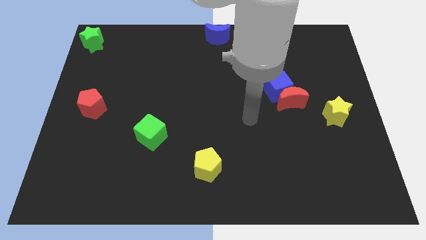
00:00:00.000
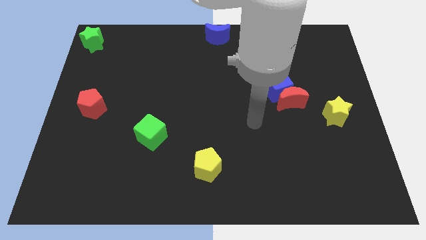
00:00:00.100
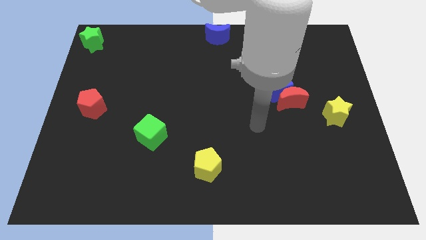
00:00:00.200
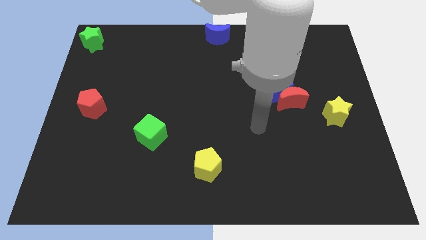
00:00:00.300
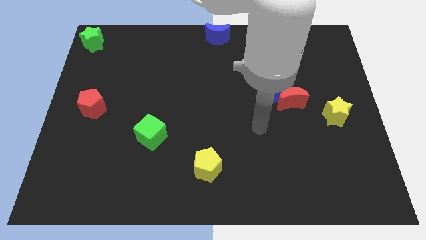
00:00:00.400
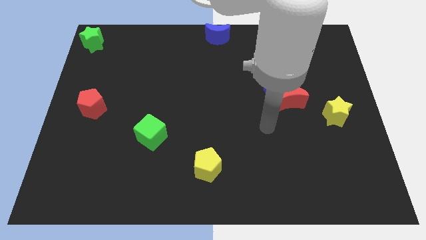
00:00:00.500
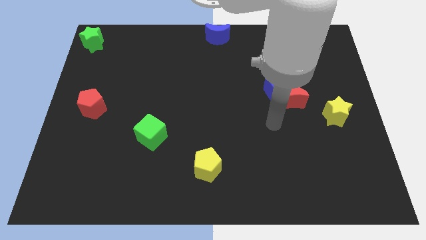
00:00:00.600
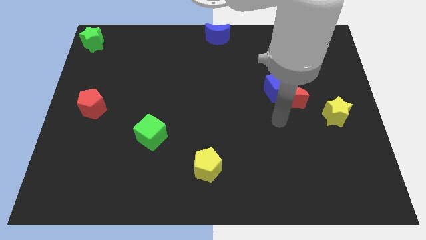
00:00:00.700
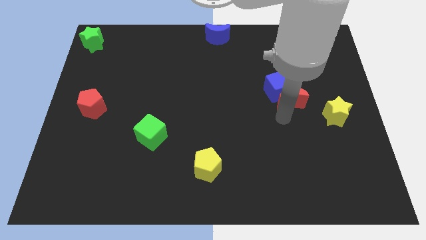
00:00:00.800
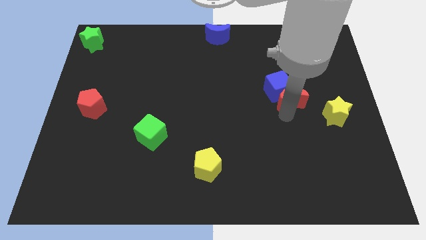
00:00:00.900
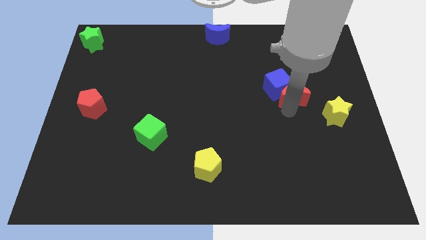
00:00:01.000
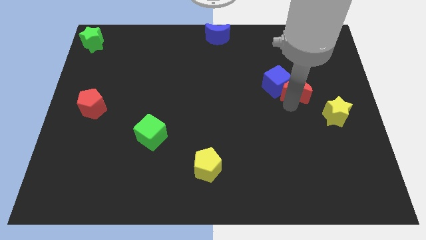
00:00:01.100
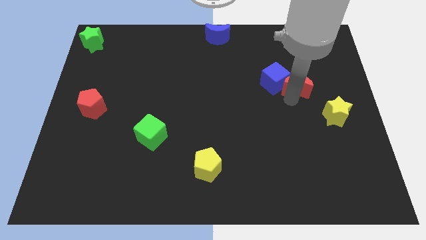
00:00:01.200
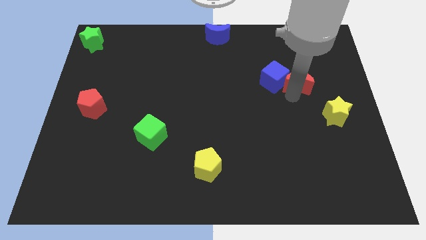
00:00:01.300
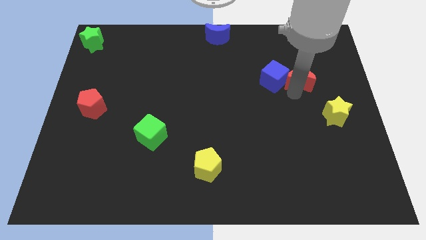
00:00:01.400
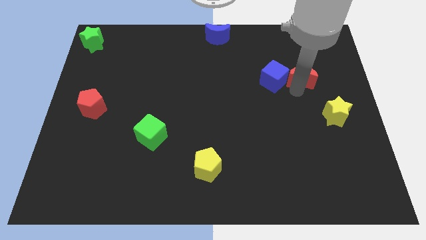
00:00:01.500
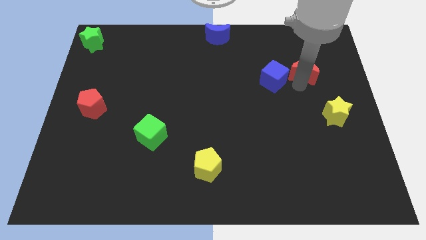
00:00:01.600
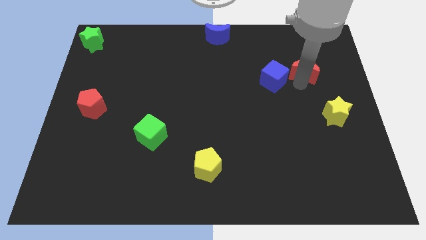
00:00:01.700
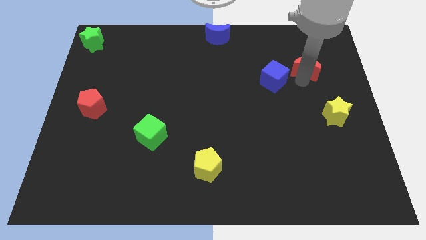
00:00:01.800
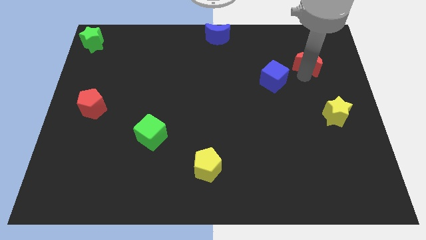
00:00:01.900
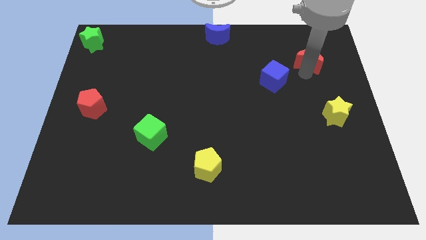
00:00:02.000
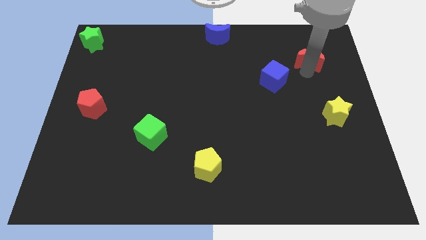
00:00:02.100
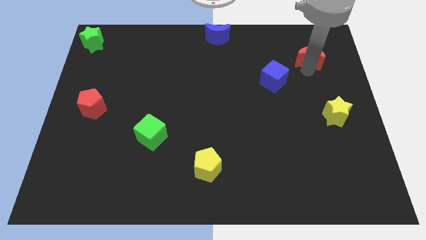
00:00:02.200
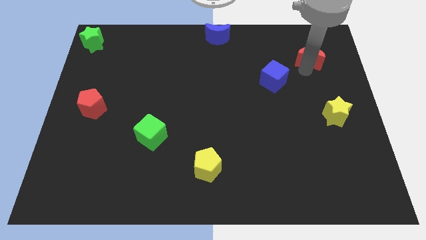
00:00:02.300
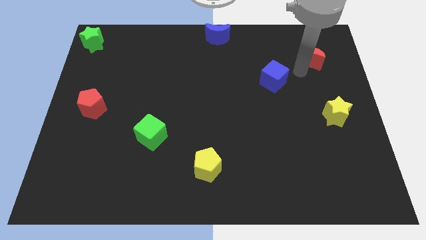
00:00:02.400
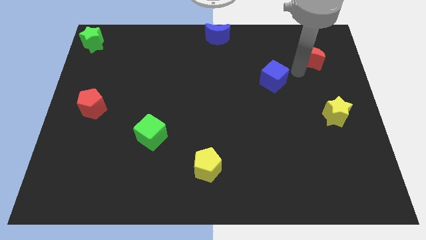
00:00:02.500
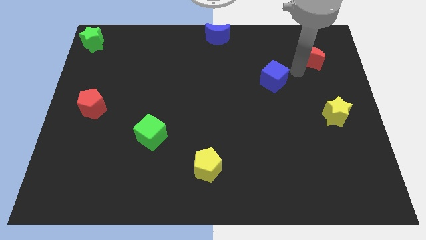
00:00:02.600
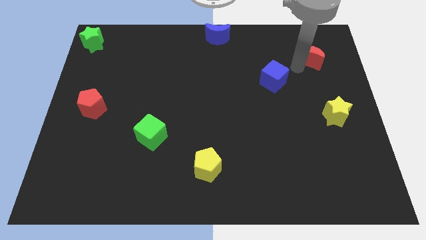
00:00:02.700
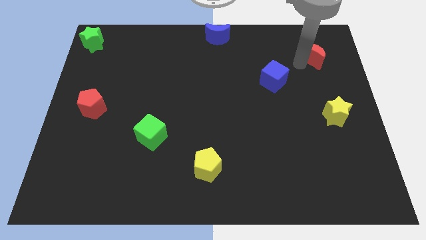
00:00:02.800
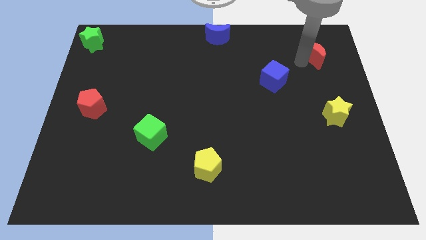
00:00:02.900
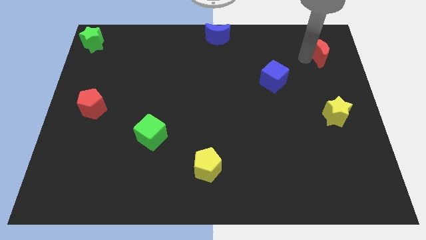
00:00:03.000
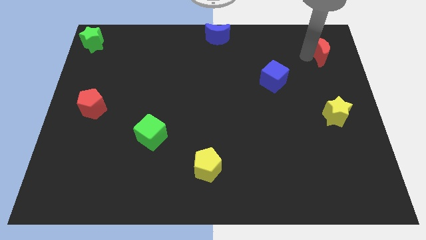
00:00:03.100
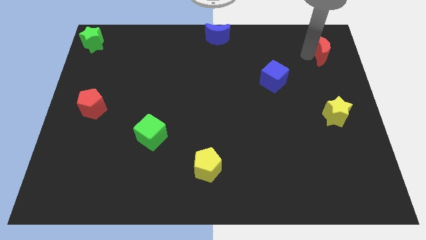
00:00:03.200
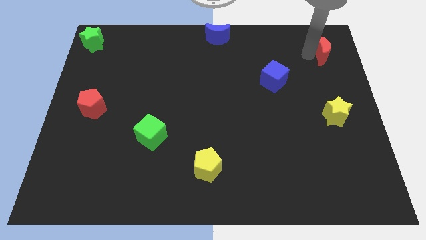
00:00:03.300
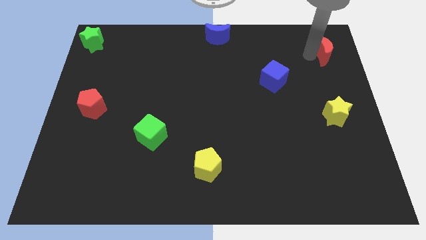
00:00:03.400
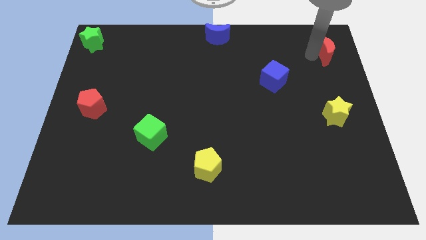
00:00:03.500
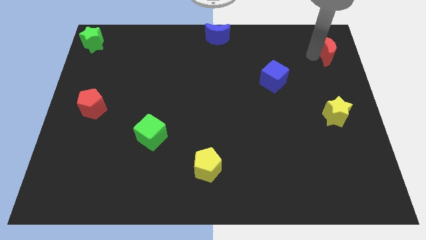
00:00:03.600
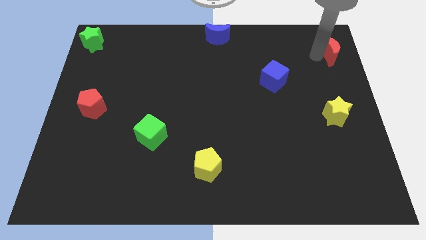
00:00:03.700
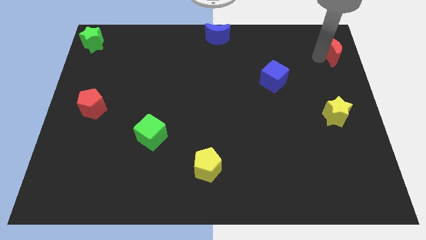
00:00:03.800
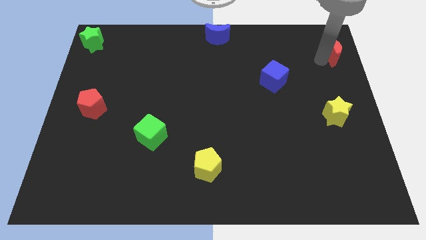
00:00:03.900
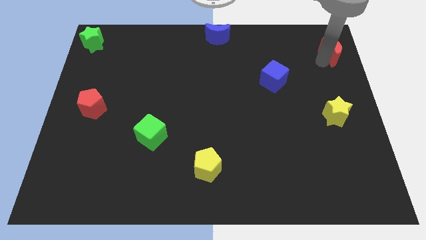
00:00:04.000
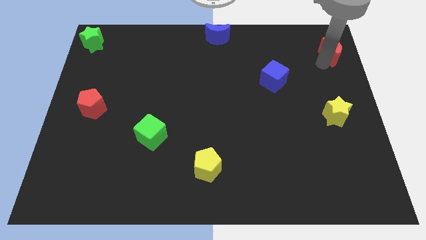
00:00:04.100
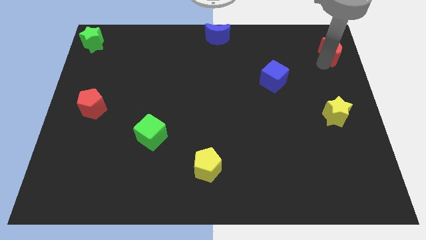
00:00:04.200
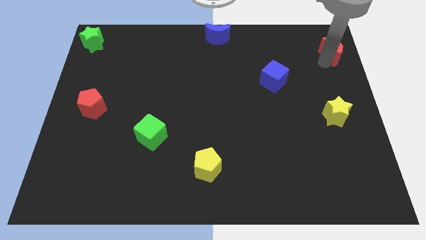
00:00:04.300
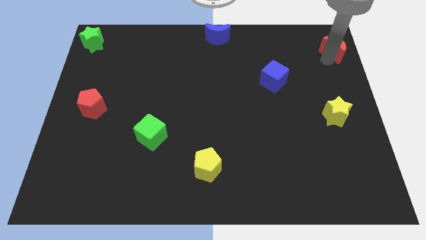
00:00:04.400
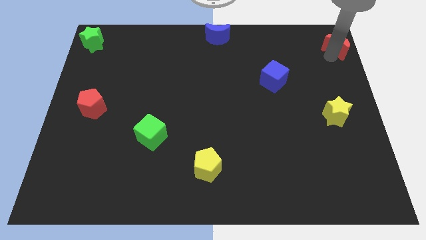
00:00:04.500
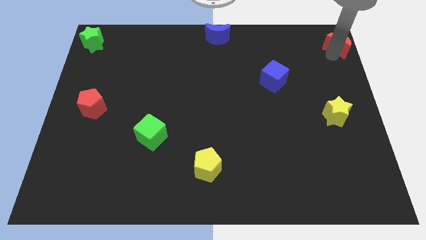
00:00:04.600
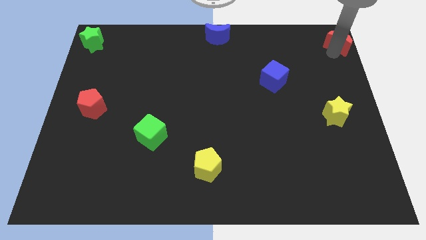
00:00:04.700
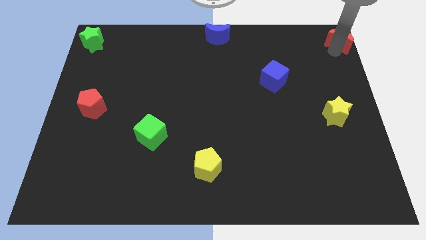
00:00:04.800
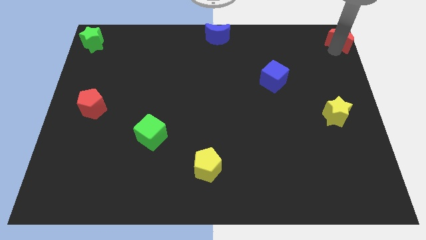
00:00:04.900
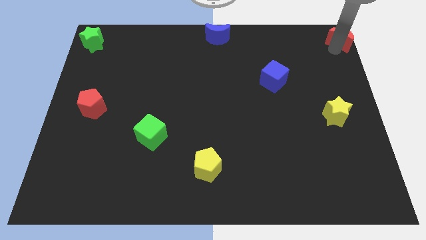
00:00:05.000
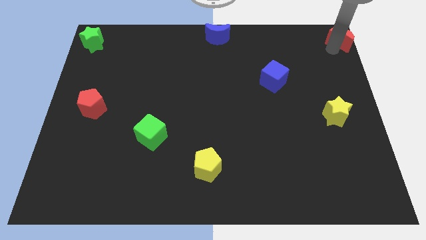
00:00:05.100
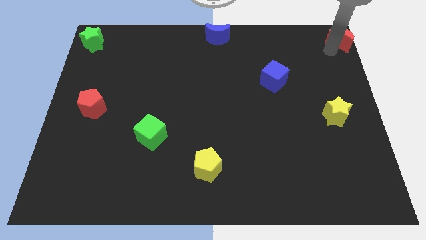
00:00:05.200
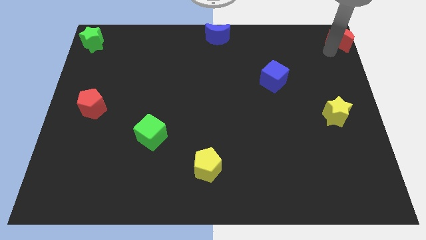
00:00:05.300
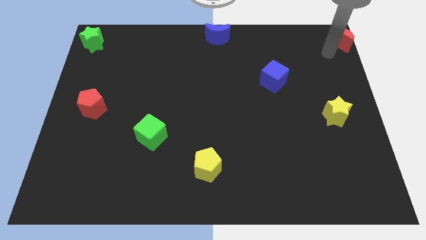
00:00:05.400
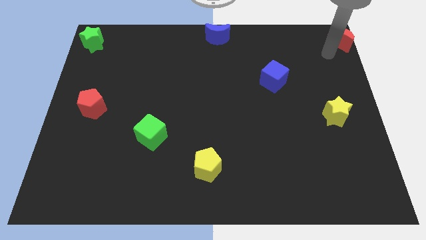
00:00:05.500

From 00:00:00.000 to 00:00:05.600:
push the red moon to the top right corner of the board

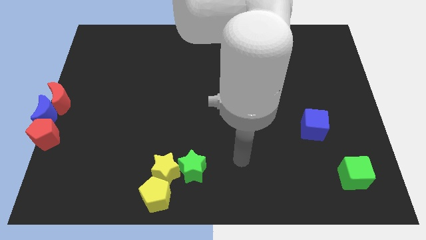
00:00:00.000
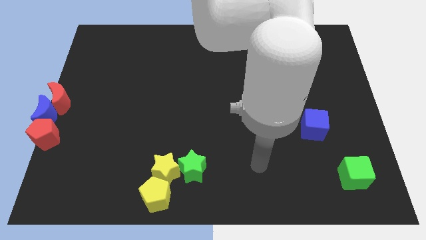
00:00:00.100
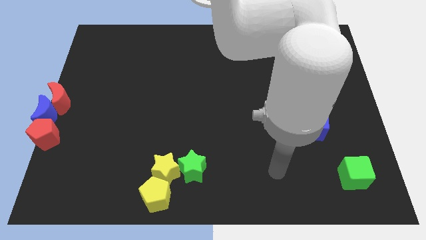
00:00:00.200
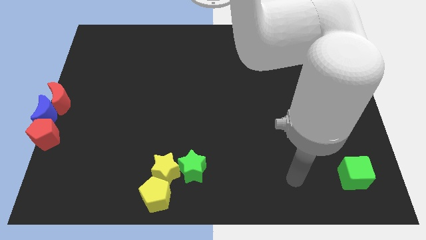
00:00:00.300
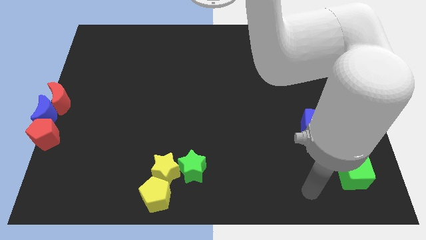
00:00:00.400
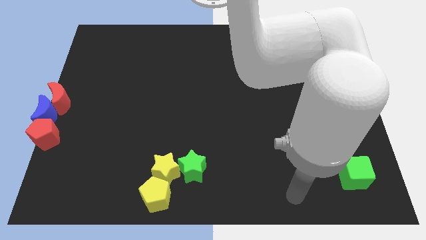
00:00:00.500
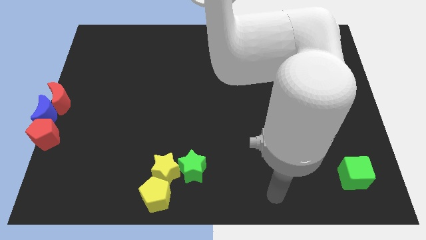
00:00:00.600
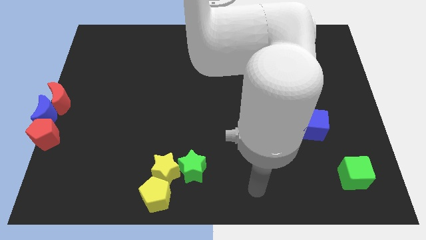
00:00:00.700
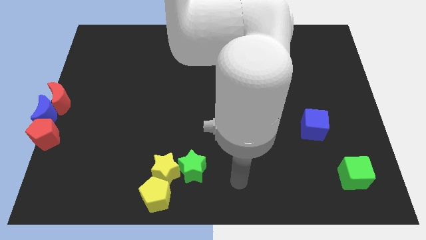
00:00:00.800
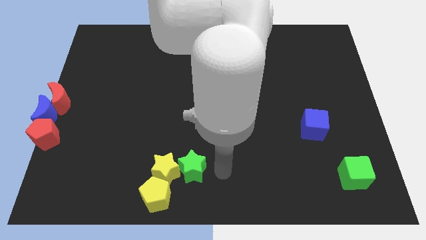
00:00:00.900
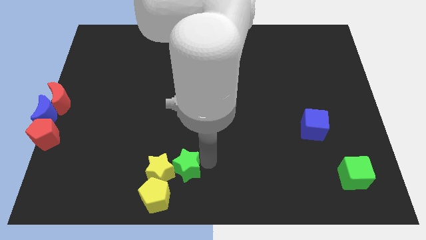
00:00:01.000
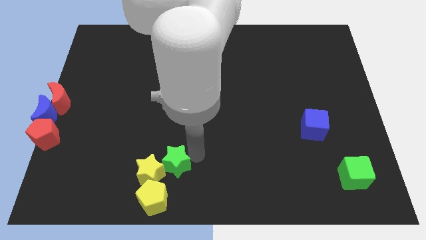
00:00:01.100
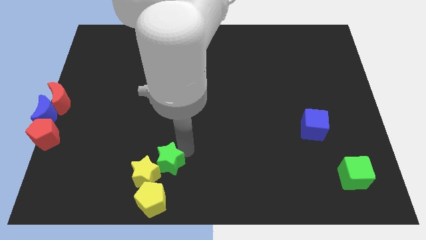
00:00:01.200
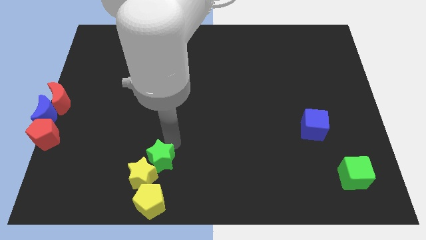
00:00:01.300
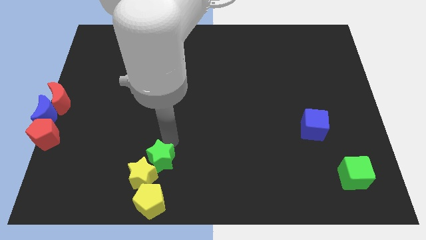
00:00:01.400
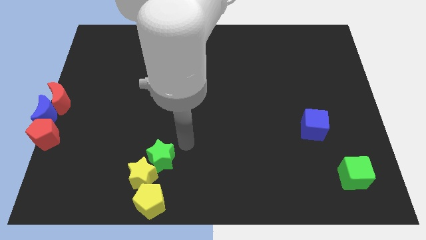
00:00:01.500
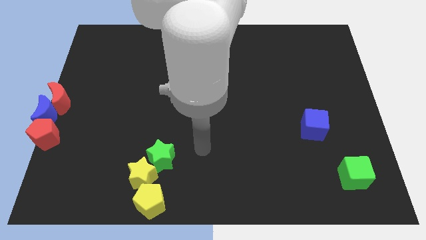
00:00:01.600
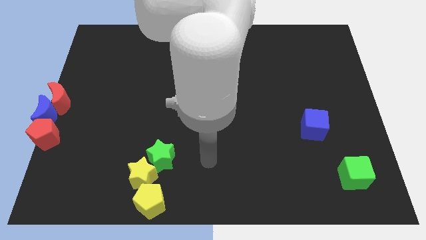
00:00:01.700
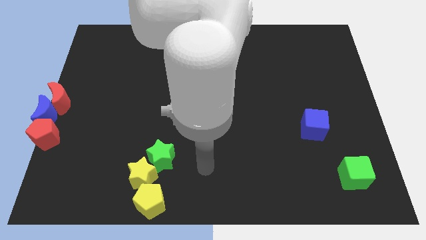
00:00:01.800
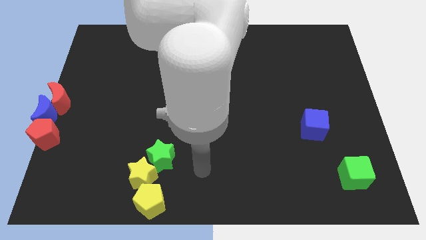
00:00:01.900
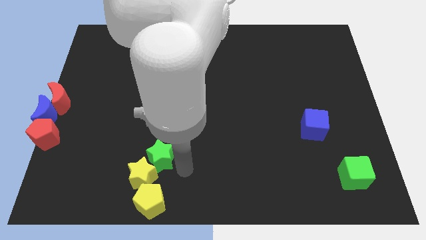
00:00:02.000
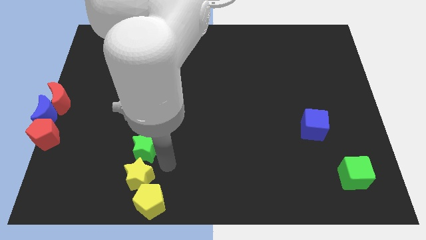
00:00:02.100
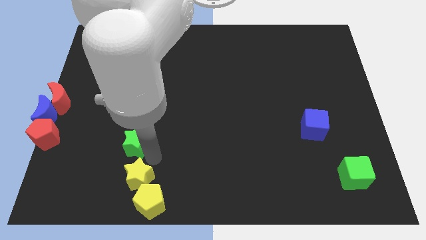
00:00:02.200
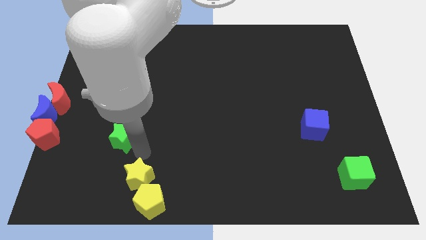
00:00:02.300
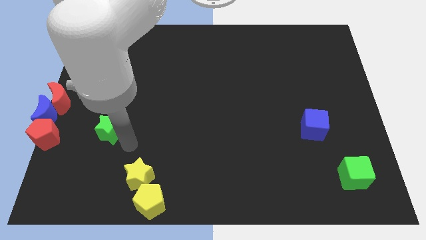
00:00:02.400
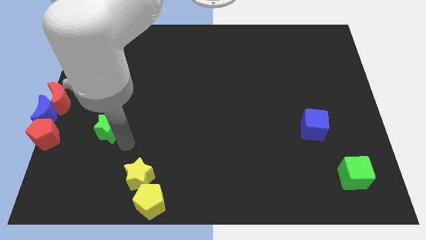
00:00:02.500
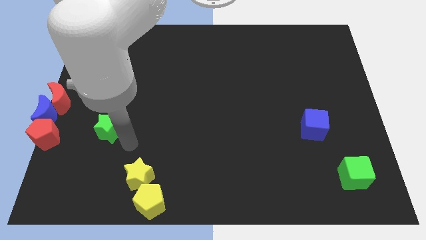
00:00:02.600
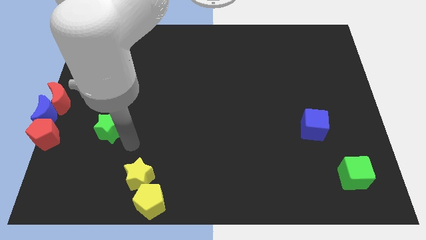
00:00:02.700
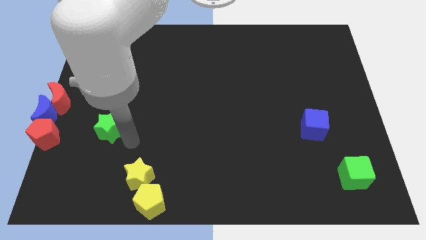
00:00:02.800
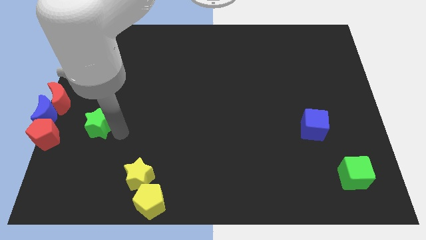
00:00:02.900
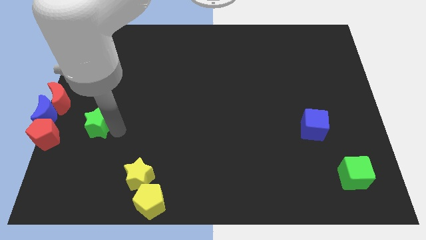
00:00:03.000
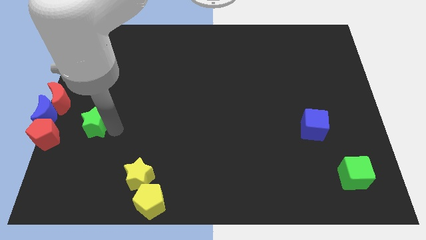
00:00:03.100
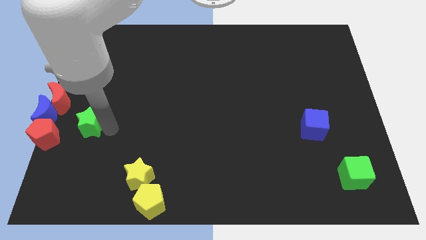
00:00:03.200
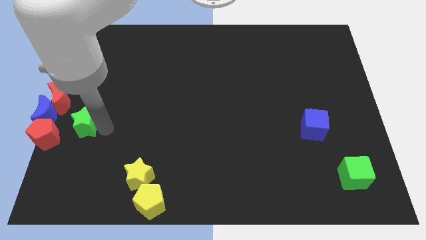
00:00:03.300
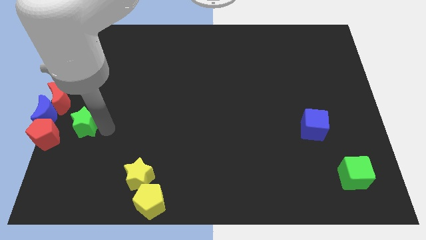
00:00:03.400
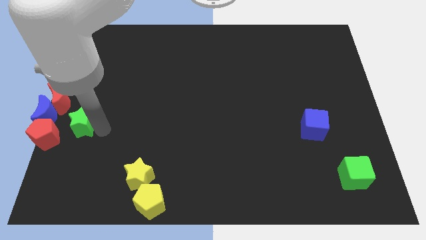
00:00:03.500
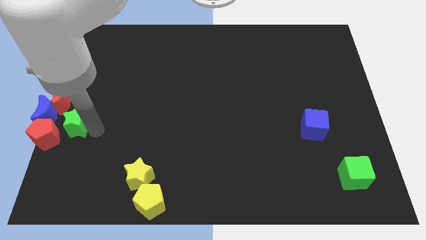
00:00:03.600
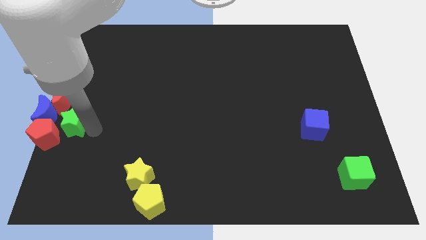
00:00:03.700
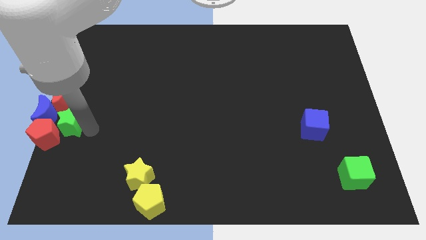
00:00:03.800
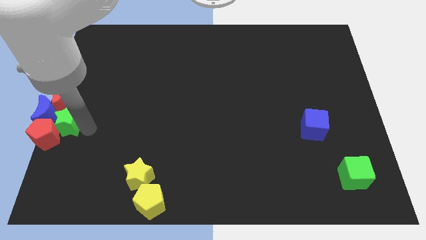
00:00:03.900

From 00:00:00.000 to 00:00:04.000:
place green star to the right of blue moon
